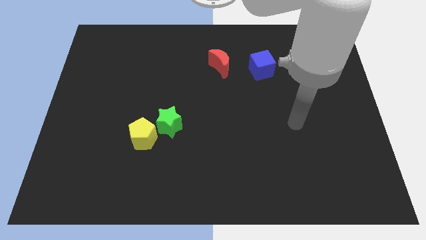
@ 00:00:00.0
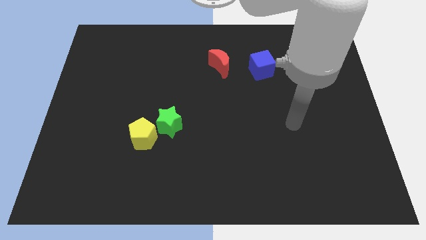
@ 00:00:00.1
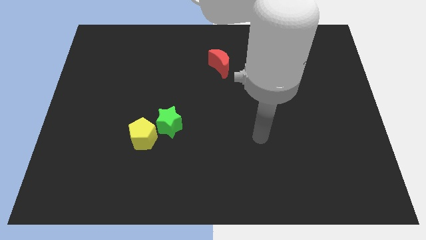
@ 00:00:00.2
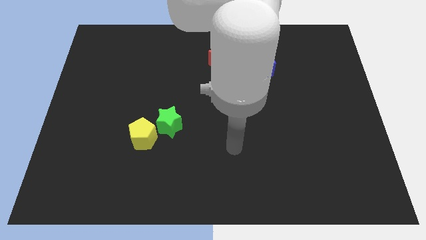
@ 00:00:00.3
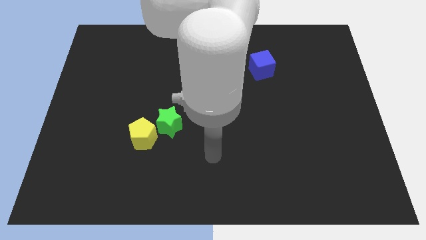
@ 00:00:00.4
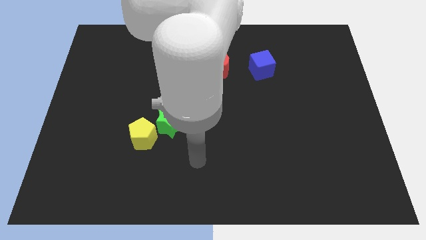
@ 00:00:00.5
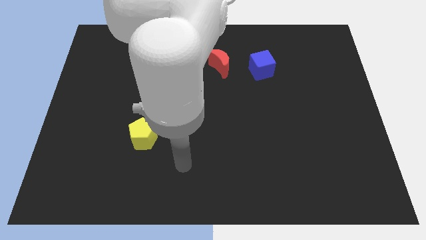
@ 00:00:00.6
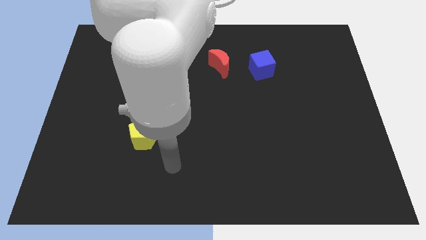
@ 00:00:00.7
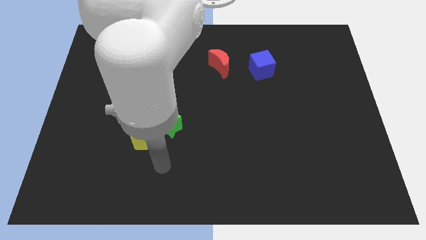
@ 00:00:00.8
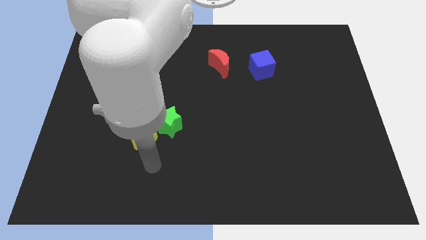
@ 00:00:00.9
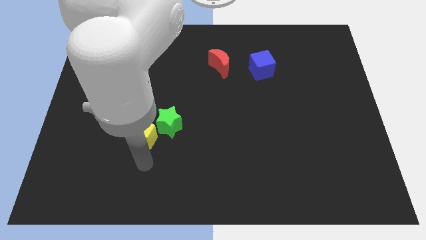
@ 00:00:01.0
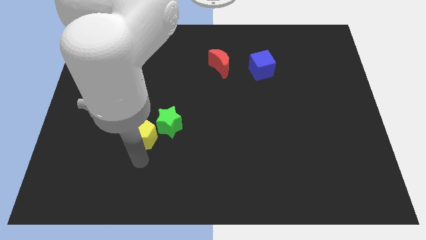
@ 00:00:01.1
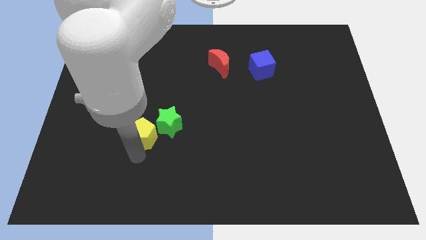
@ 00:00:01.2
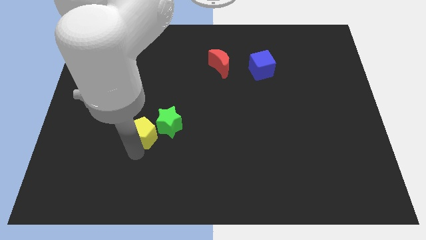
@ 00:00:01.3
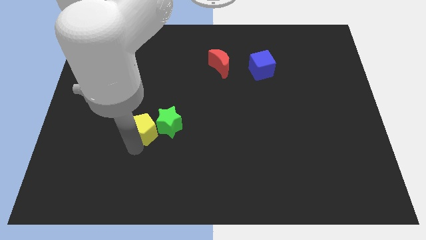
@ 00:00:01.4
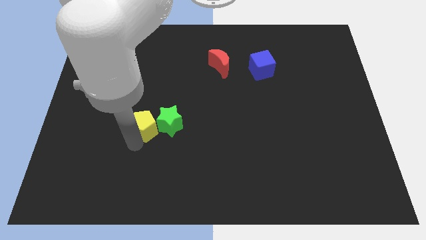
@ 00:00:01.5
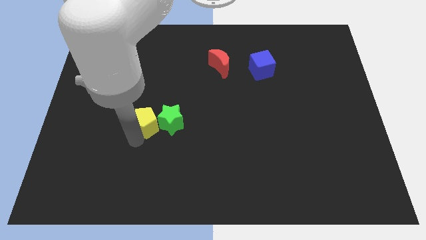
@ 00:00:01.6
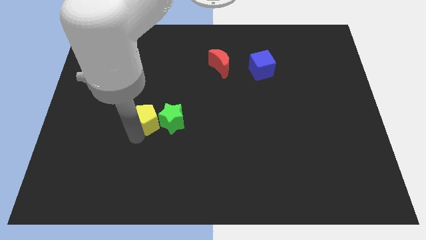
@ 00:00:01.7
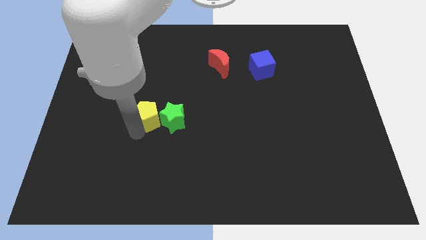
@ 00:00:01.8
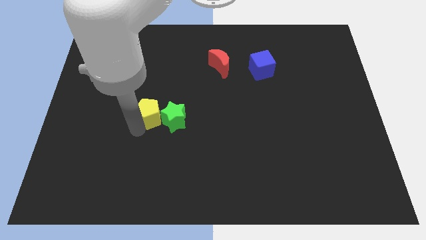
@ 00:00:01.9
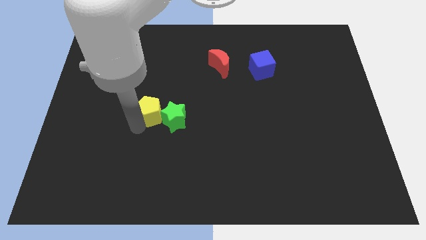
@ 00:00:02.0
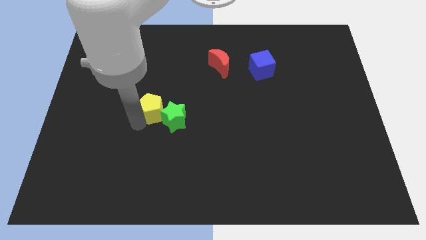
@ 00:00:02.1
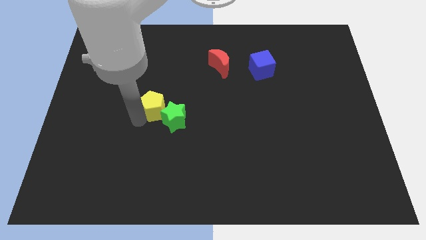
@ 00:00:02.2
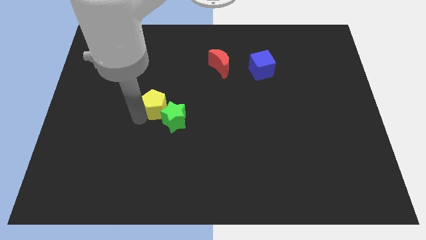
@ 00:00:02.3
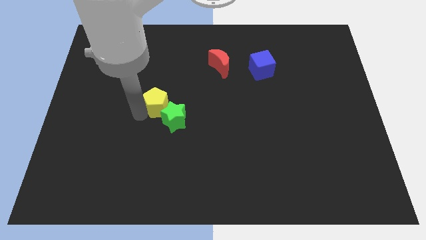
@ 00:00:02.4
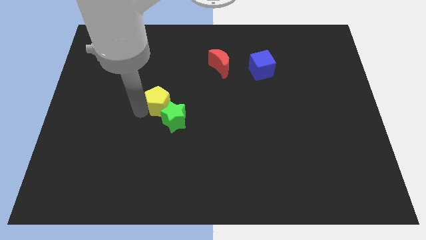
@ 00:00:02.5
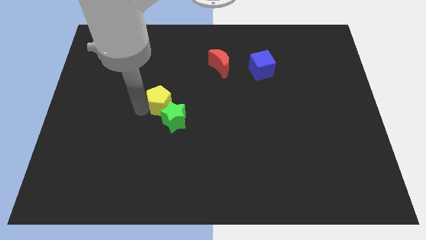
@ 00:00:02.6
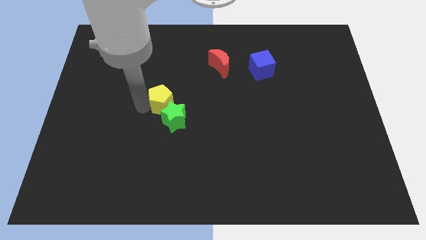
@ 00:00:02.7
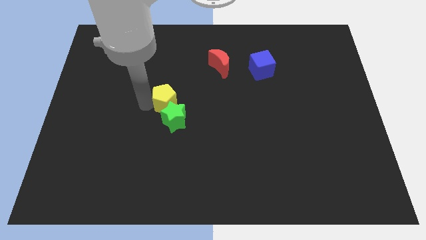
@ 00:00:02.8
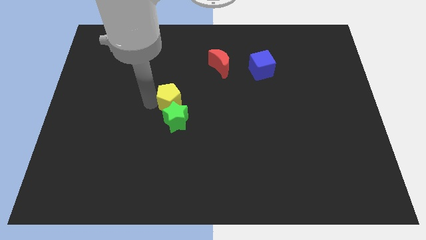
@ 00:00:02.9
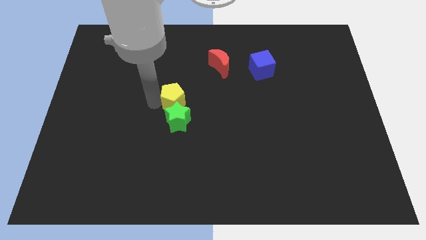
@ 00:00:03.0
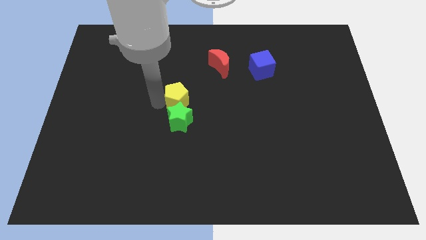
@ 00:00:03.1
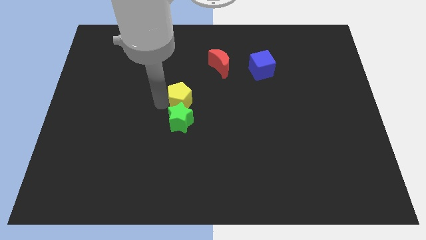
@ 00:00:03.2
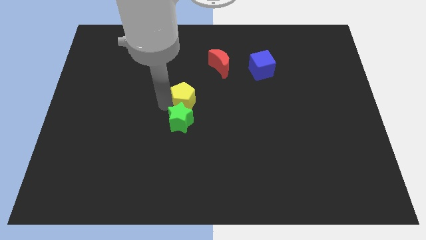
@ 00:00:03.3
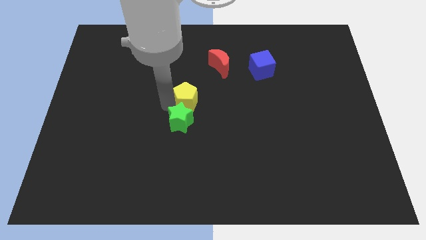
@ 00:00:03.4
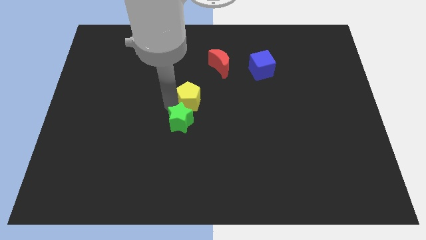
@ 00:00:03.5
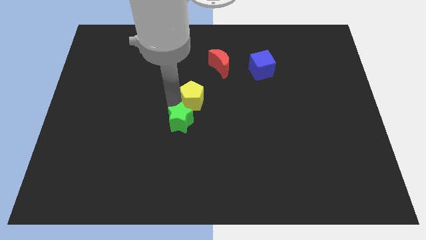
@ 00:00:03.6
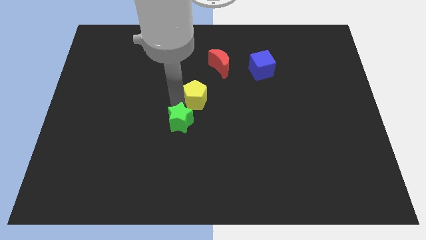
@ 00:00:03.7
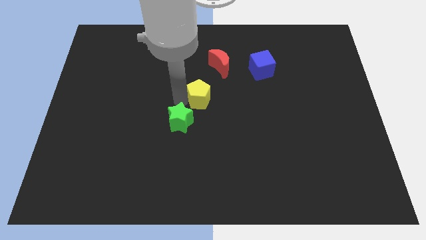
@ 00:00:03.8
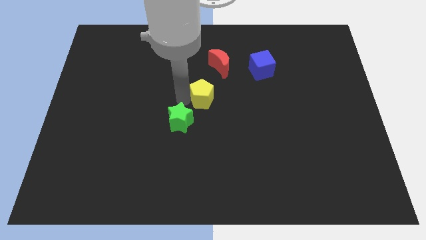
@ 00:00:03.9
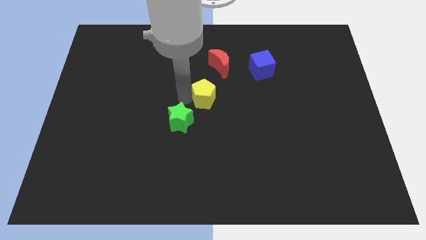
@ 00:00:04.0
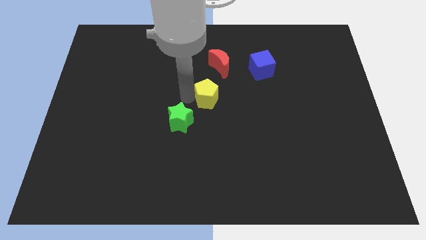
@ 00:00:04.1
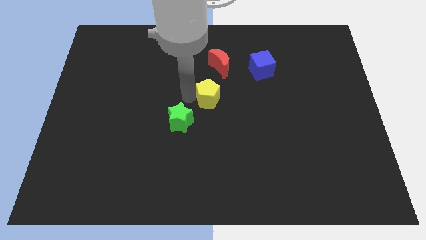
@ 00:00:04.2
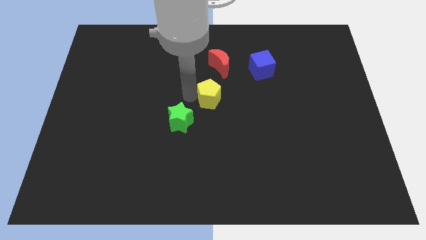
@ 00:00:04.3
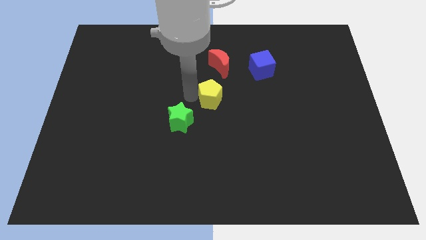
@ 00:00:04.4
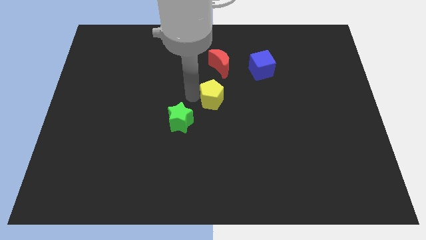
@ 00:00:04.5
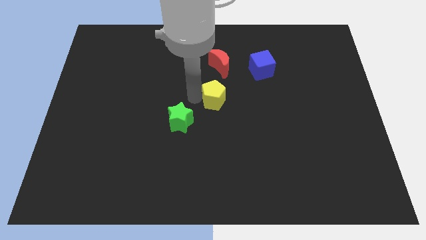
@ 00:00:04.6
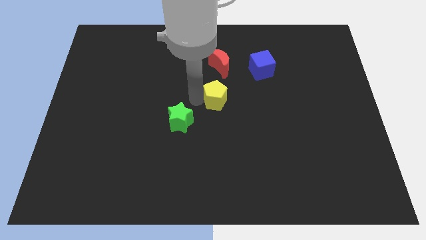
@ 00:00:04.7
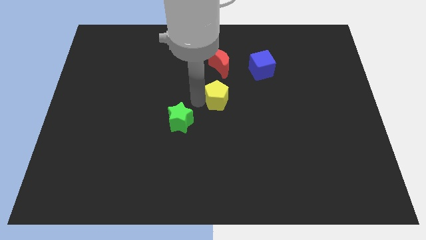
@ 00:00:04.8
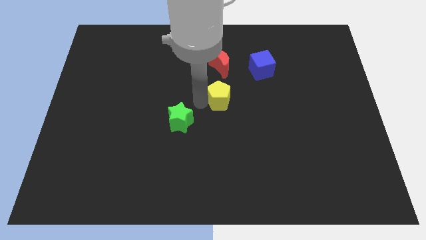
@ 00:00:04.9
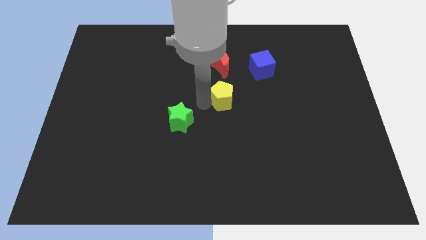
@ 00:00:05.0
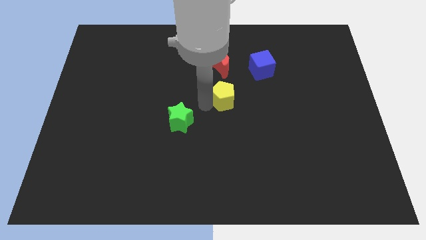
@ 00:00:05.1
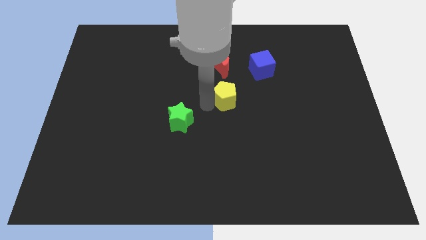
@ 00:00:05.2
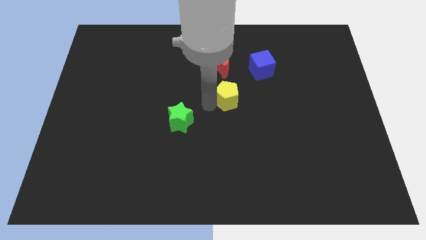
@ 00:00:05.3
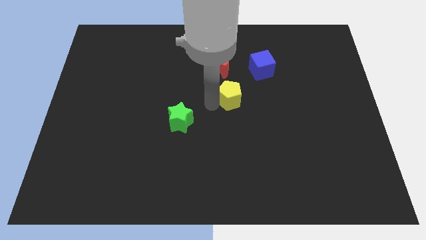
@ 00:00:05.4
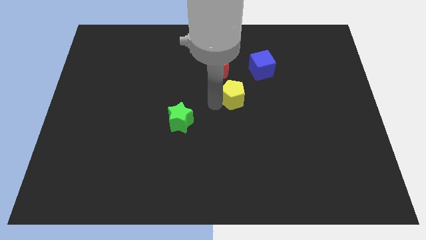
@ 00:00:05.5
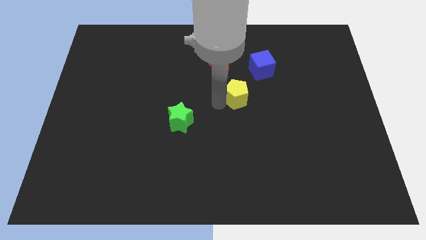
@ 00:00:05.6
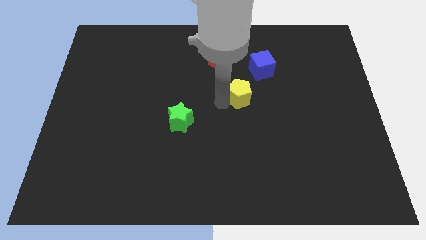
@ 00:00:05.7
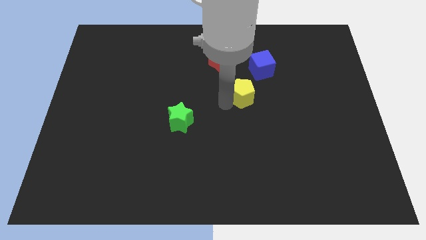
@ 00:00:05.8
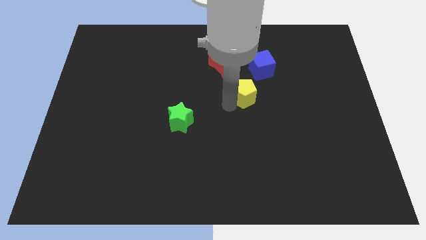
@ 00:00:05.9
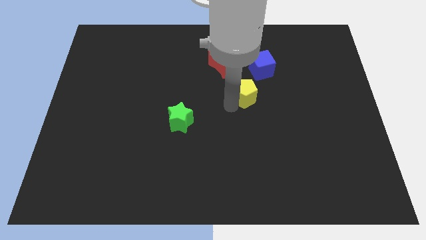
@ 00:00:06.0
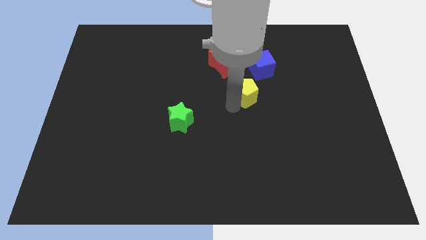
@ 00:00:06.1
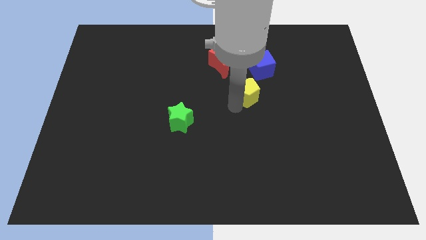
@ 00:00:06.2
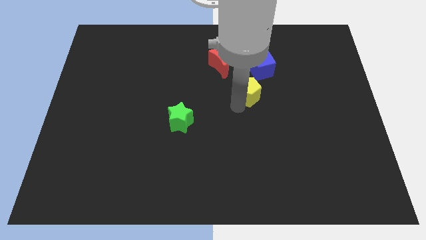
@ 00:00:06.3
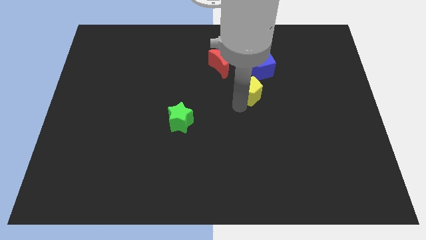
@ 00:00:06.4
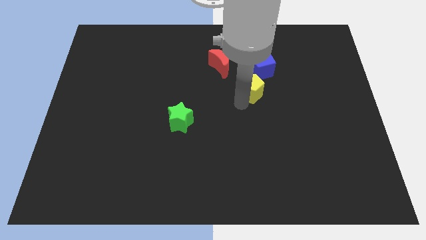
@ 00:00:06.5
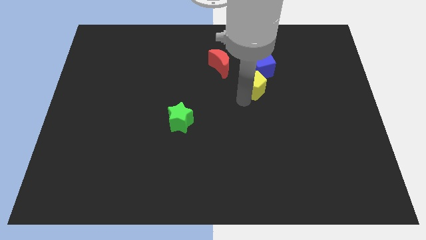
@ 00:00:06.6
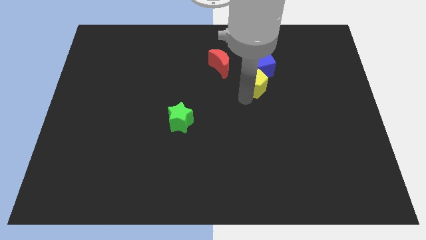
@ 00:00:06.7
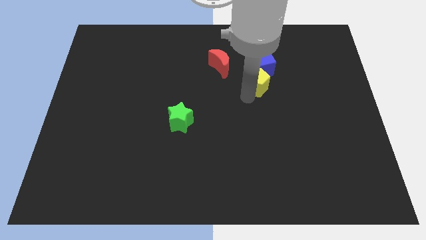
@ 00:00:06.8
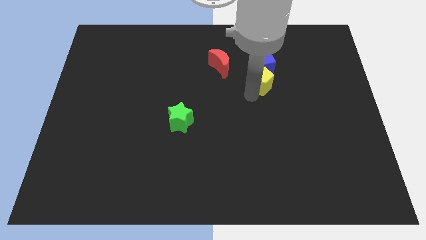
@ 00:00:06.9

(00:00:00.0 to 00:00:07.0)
put the yellow block next to the blue cube

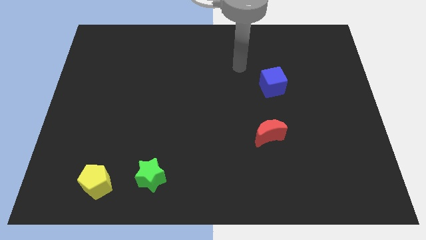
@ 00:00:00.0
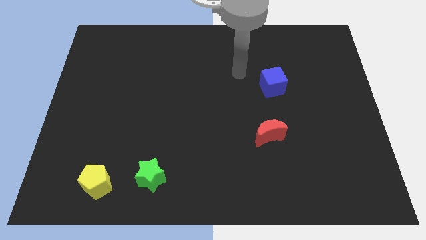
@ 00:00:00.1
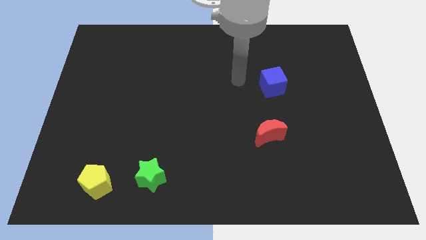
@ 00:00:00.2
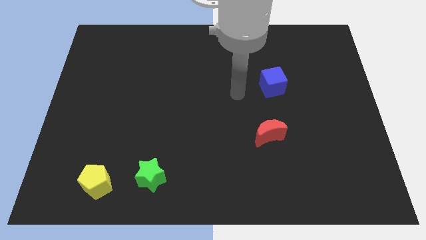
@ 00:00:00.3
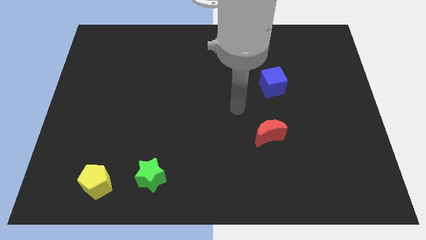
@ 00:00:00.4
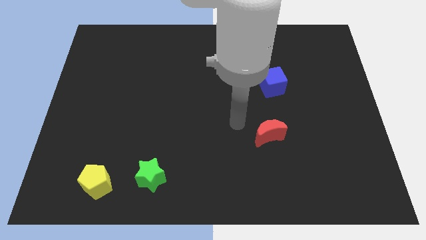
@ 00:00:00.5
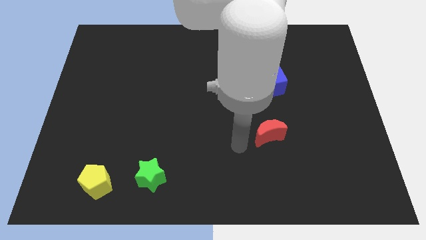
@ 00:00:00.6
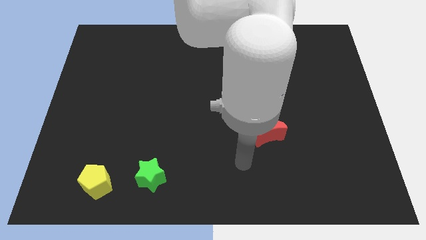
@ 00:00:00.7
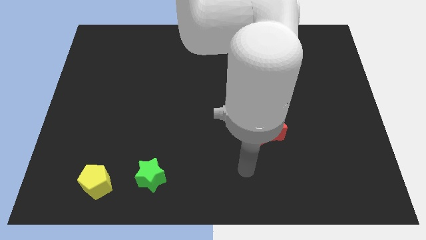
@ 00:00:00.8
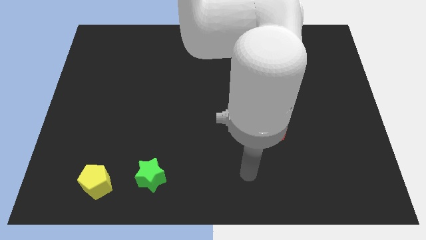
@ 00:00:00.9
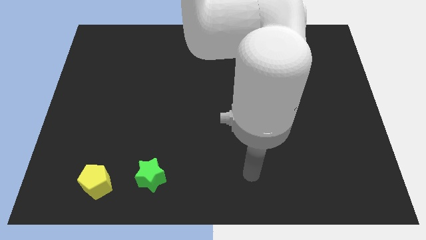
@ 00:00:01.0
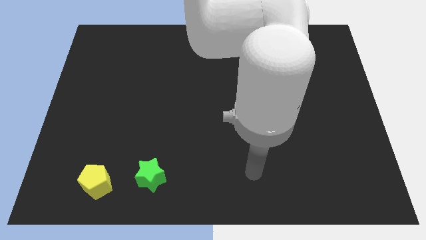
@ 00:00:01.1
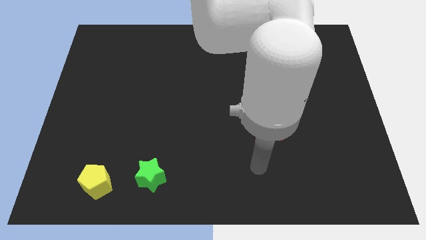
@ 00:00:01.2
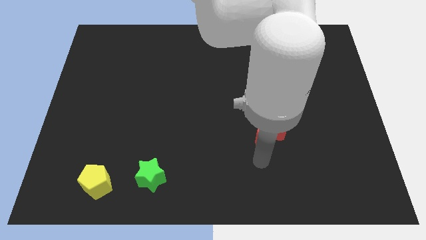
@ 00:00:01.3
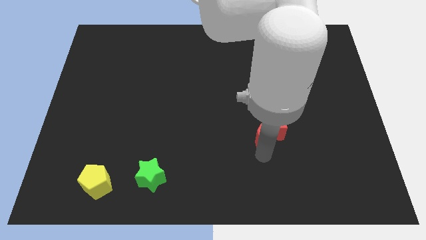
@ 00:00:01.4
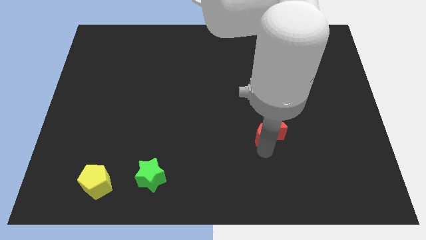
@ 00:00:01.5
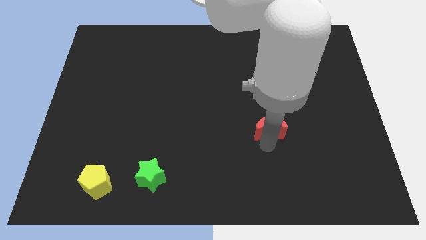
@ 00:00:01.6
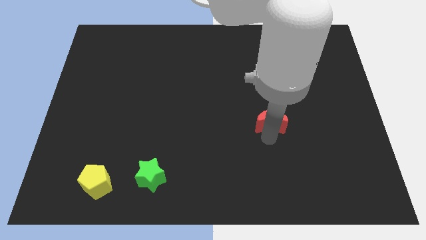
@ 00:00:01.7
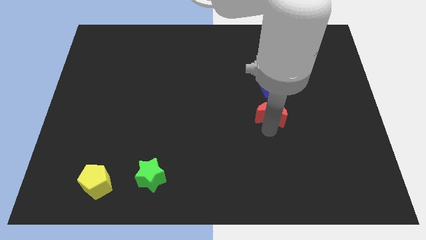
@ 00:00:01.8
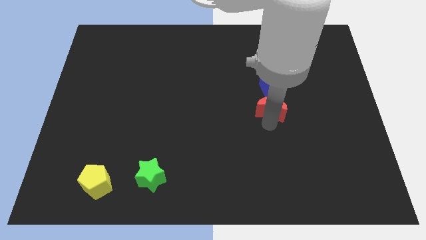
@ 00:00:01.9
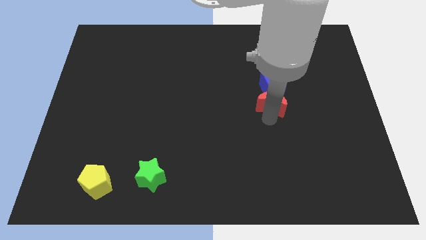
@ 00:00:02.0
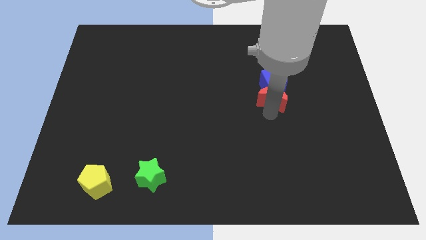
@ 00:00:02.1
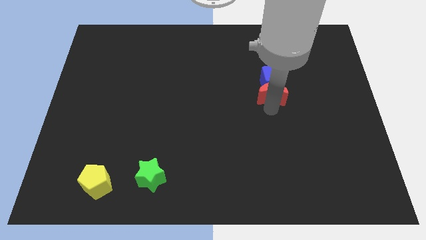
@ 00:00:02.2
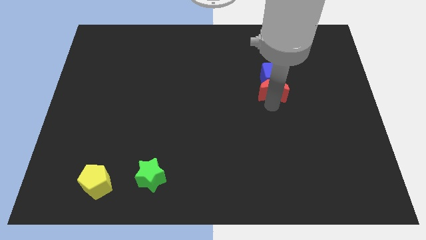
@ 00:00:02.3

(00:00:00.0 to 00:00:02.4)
move the red moon close to the blue cube
